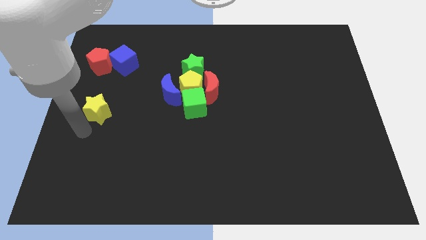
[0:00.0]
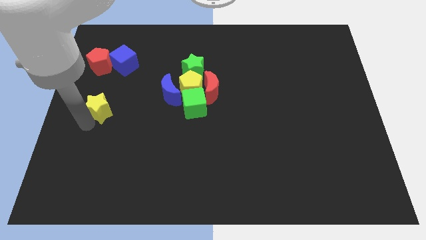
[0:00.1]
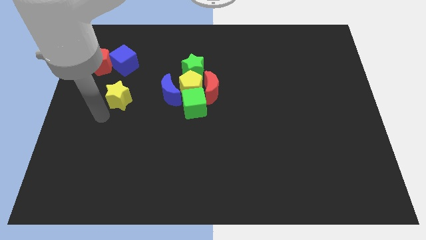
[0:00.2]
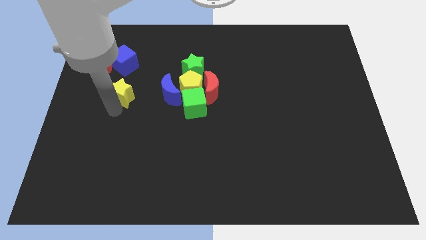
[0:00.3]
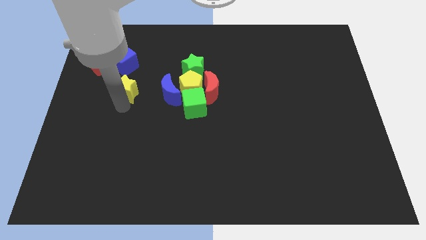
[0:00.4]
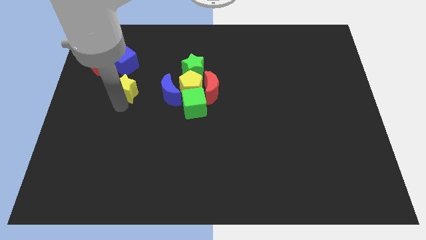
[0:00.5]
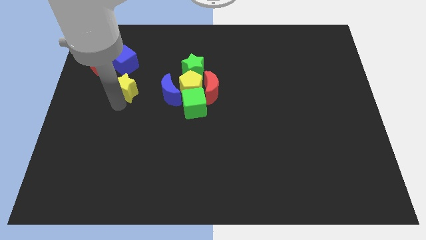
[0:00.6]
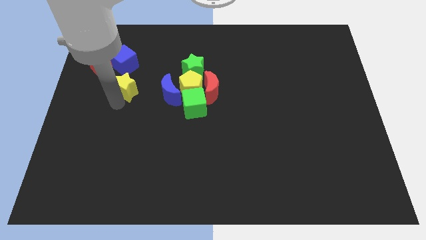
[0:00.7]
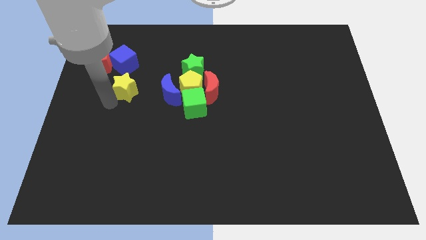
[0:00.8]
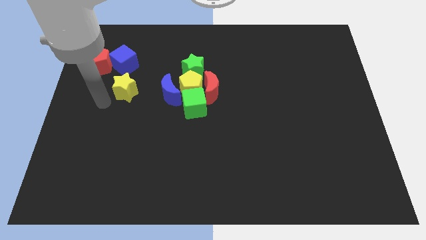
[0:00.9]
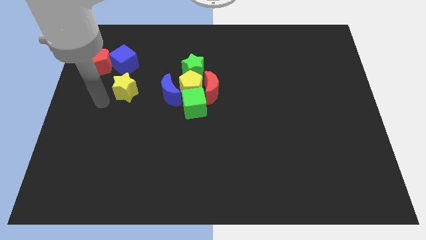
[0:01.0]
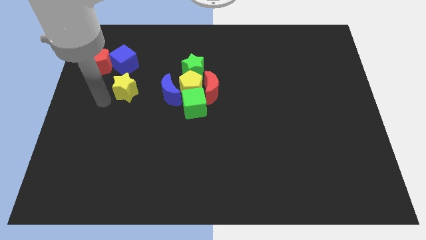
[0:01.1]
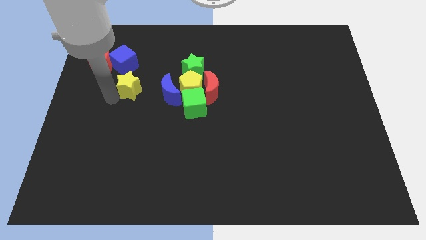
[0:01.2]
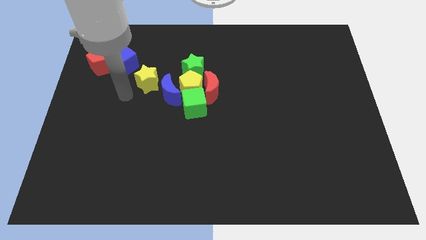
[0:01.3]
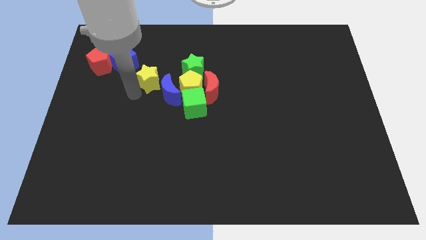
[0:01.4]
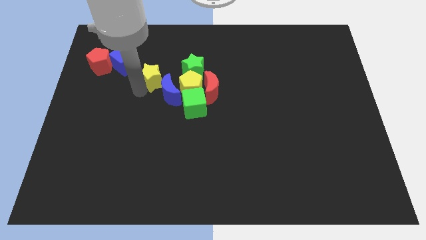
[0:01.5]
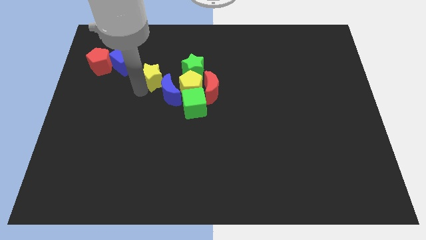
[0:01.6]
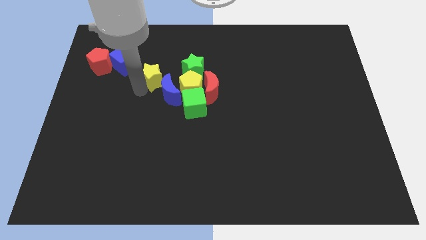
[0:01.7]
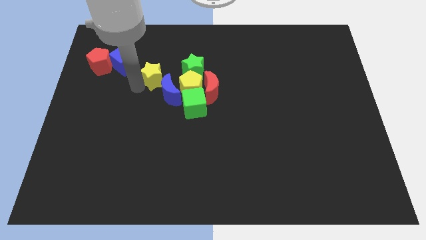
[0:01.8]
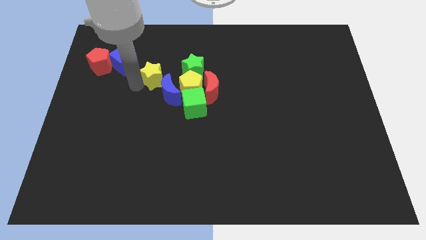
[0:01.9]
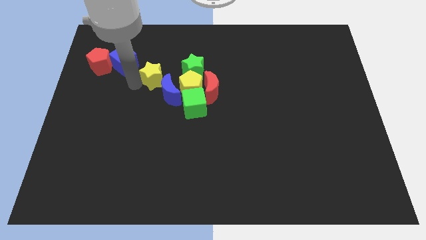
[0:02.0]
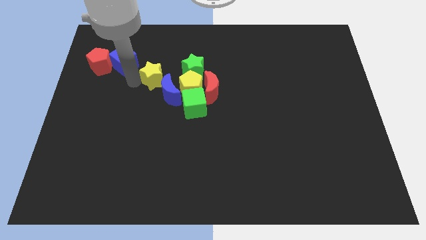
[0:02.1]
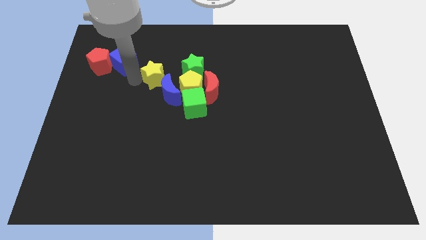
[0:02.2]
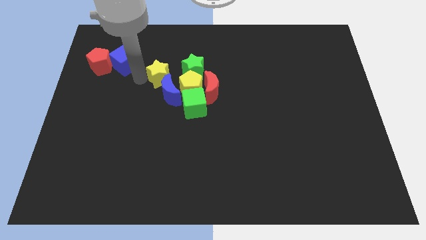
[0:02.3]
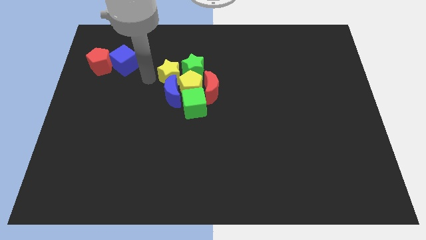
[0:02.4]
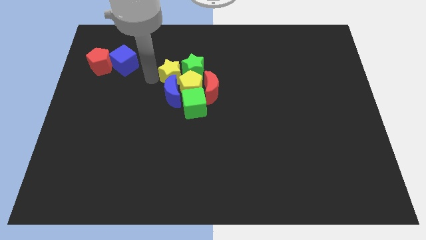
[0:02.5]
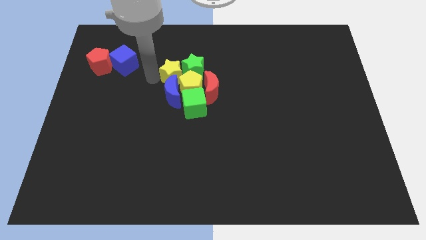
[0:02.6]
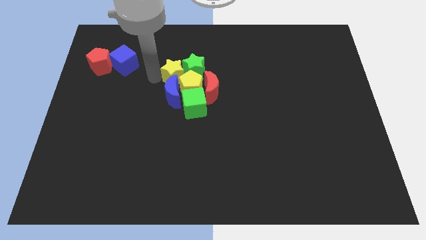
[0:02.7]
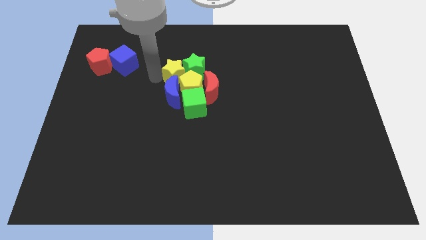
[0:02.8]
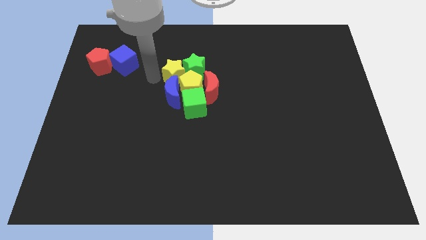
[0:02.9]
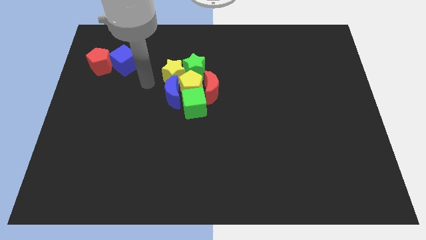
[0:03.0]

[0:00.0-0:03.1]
push the yellow star into the right of the green star

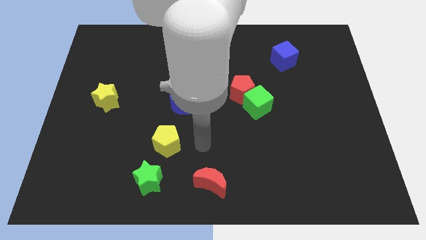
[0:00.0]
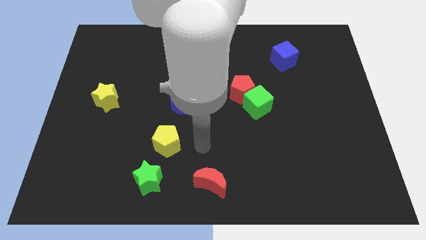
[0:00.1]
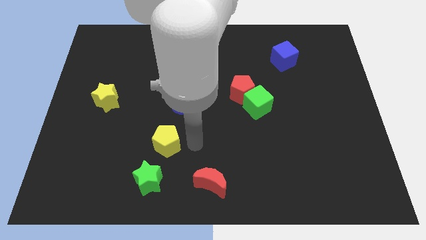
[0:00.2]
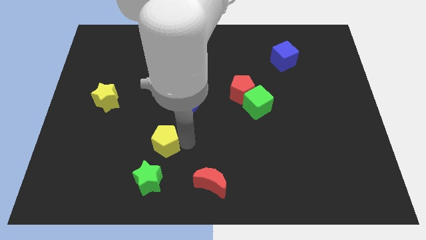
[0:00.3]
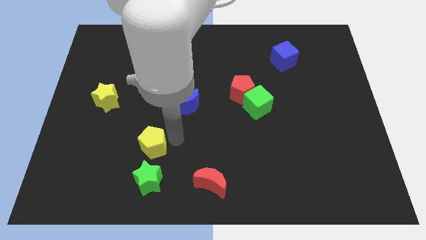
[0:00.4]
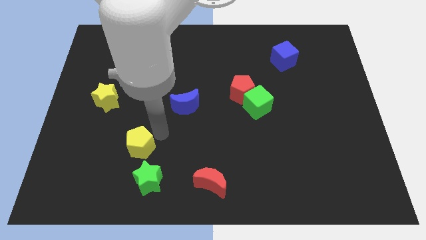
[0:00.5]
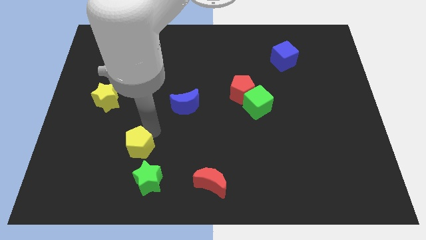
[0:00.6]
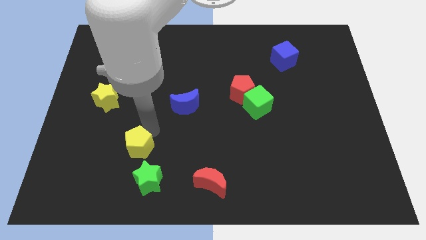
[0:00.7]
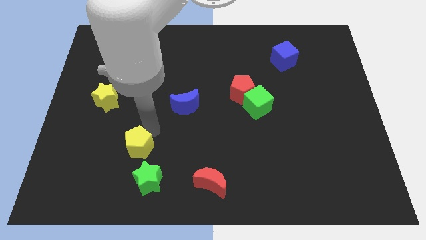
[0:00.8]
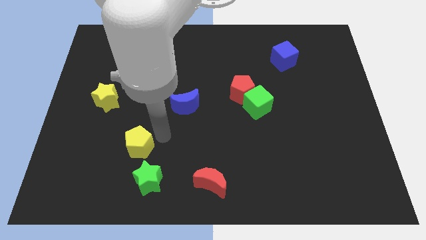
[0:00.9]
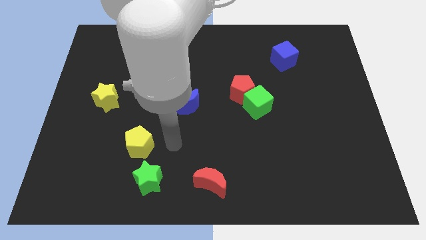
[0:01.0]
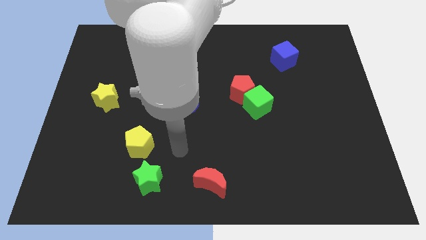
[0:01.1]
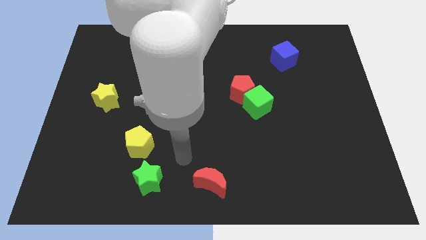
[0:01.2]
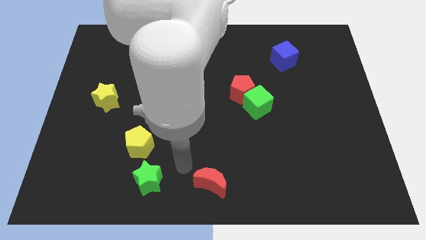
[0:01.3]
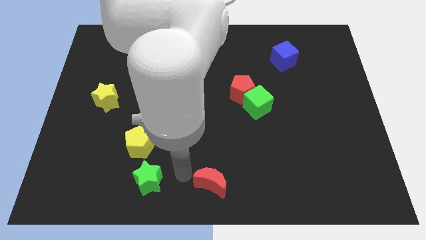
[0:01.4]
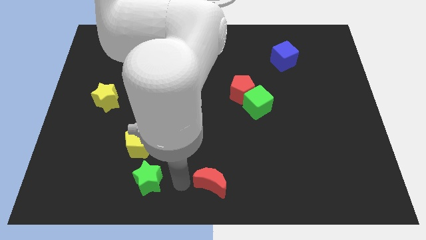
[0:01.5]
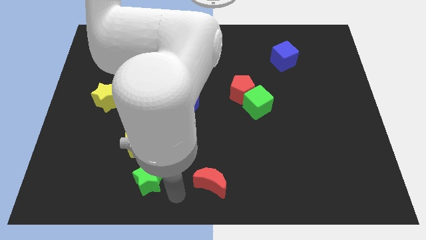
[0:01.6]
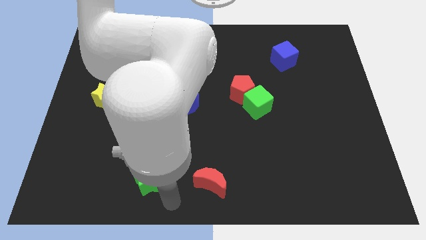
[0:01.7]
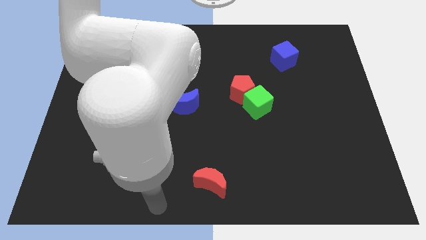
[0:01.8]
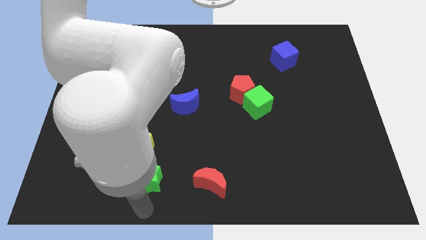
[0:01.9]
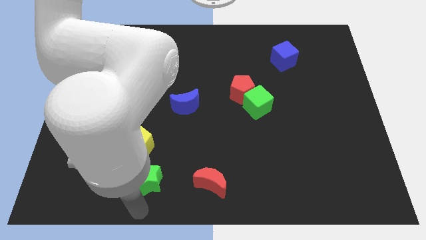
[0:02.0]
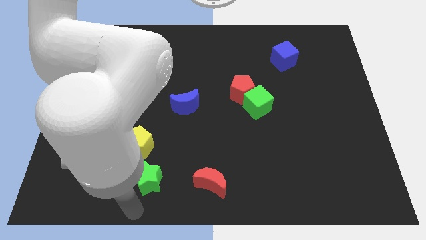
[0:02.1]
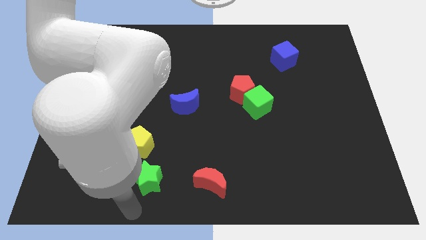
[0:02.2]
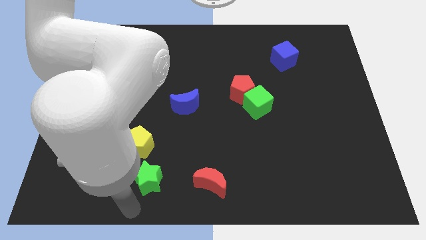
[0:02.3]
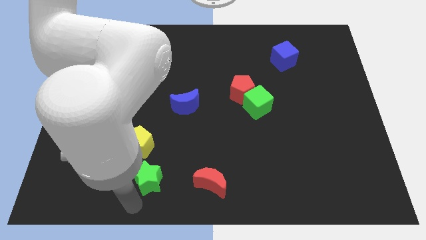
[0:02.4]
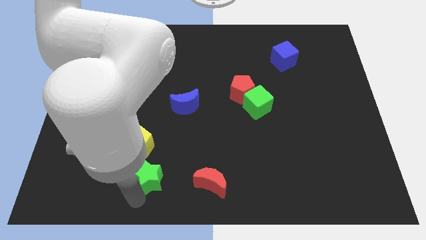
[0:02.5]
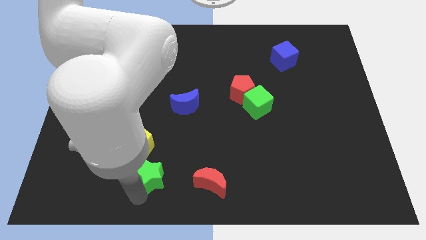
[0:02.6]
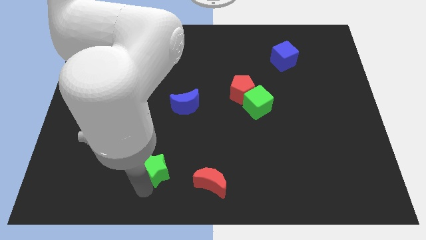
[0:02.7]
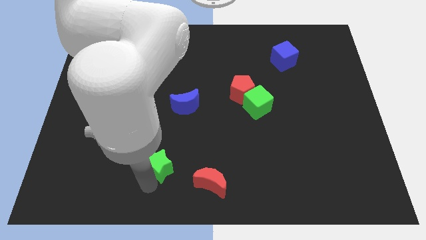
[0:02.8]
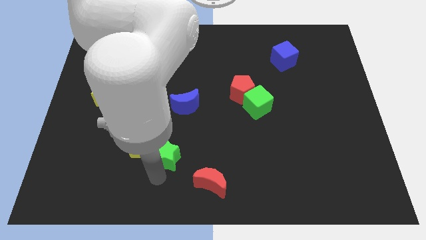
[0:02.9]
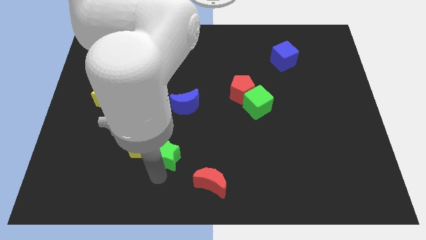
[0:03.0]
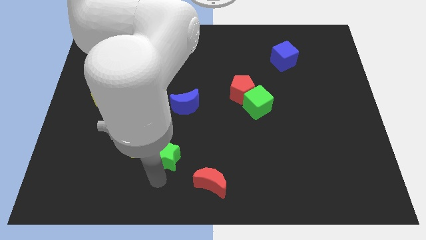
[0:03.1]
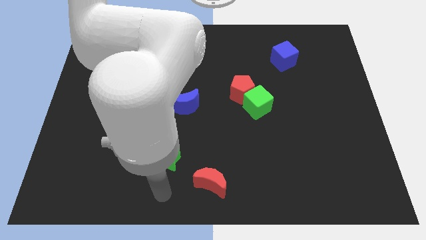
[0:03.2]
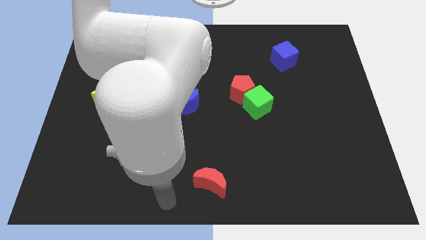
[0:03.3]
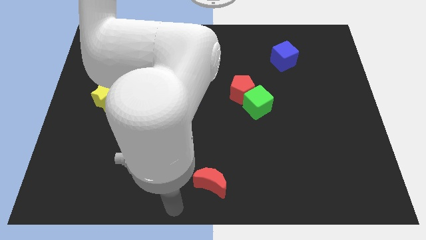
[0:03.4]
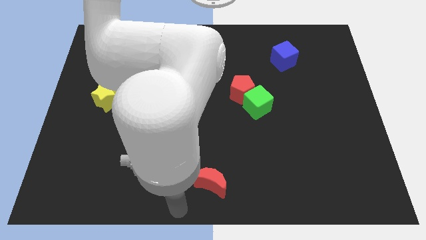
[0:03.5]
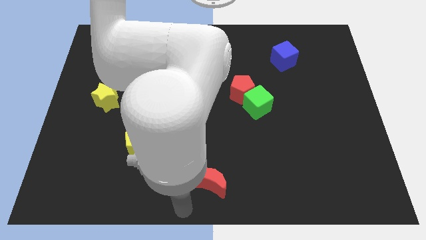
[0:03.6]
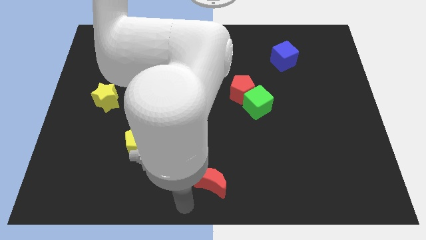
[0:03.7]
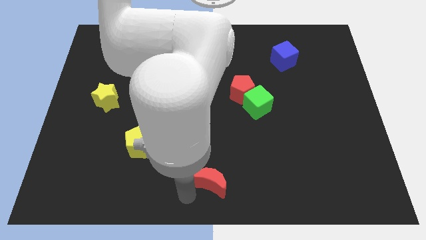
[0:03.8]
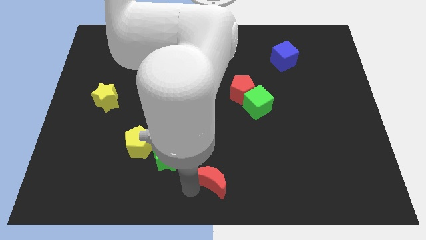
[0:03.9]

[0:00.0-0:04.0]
make a diagonal line with the yellow pentagon green star and red crescent

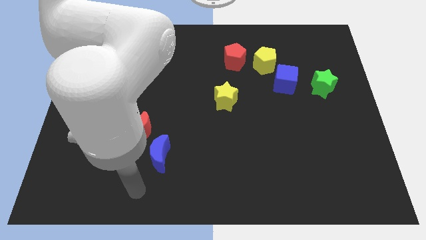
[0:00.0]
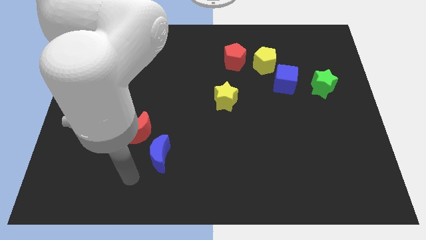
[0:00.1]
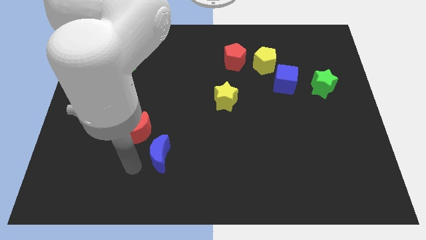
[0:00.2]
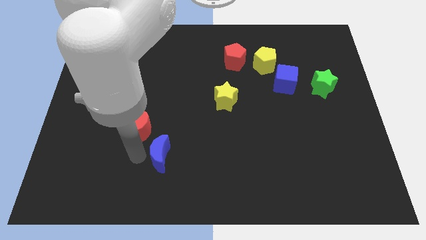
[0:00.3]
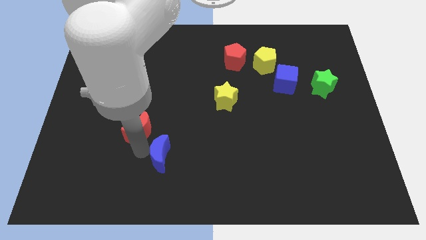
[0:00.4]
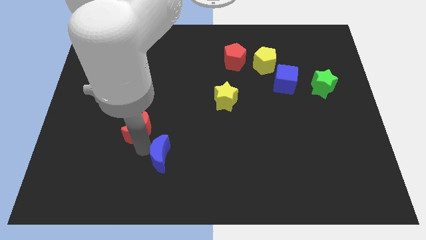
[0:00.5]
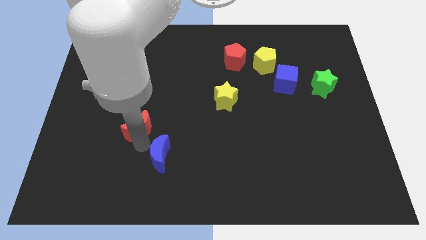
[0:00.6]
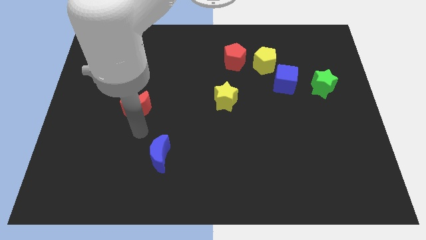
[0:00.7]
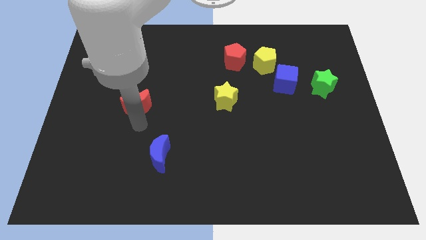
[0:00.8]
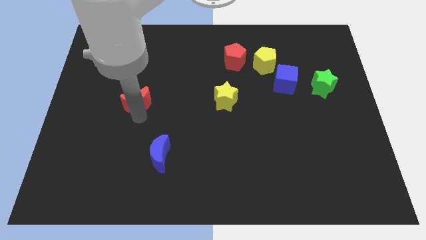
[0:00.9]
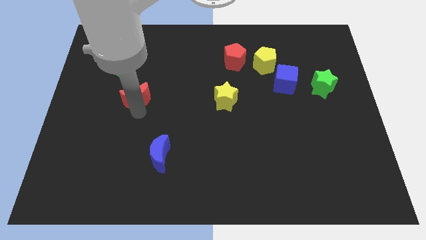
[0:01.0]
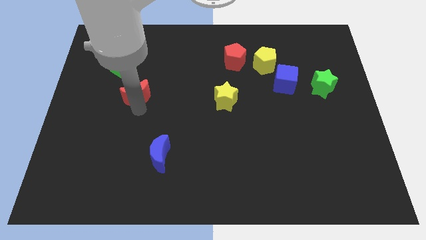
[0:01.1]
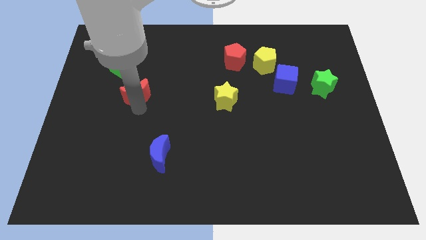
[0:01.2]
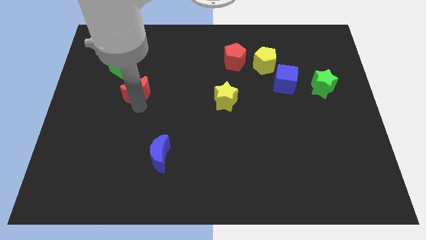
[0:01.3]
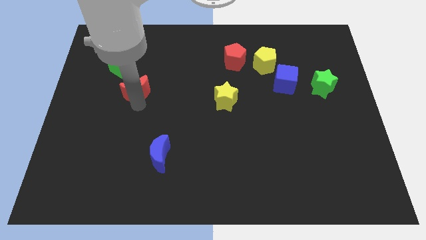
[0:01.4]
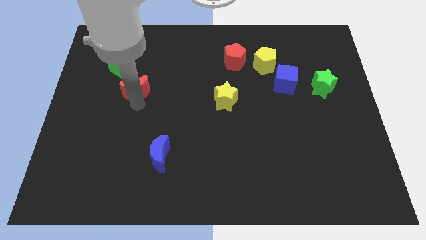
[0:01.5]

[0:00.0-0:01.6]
place the red crescent below the green cube

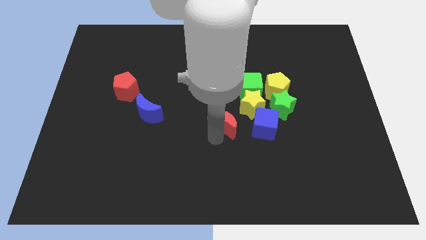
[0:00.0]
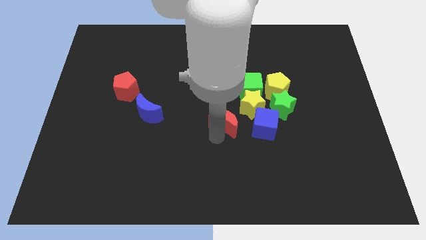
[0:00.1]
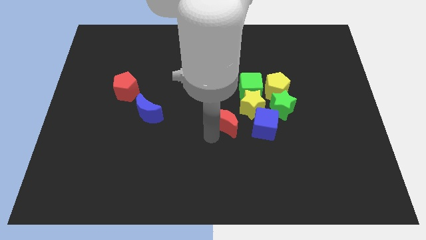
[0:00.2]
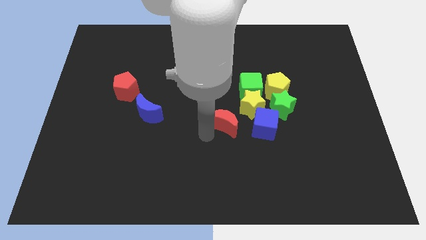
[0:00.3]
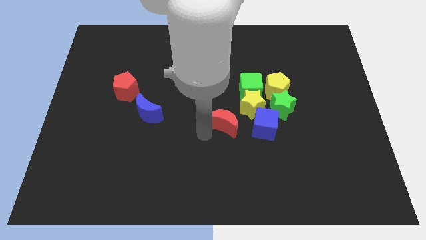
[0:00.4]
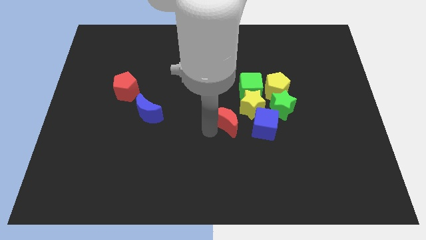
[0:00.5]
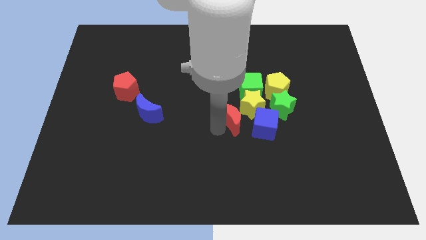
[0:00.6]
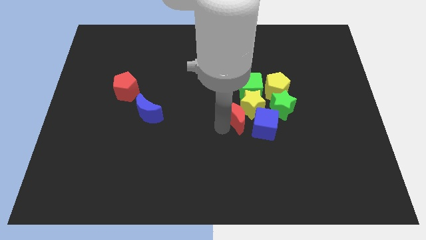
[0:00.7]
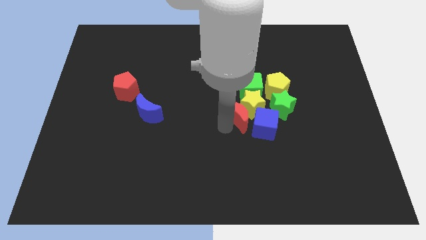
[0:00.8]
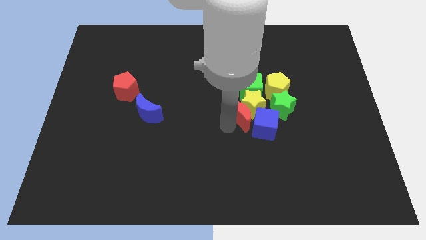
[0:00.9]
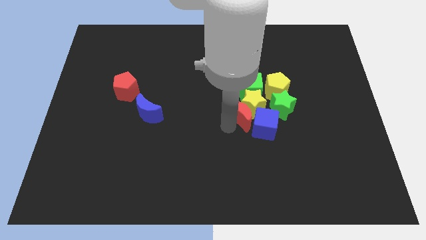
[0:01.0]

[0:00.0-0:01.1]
slide red moon into the yellow star
